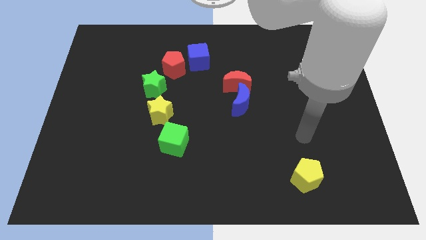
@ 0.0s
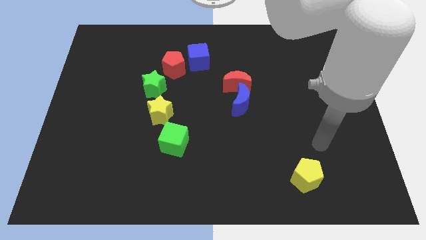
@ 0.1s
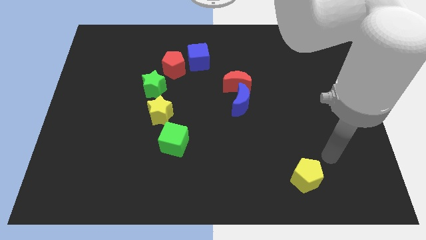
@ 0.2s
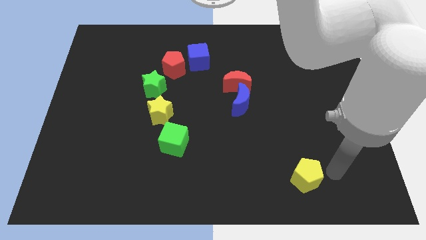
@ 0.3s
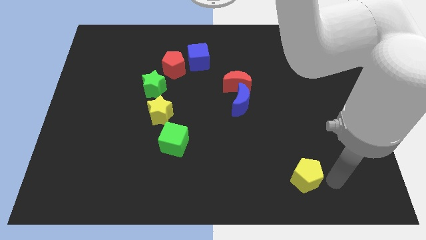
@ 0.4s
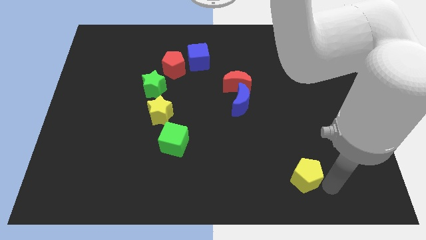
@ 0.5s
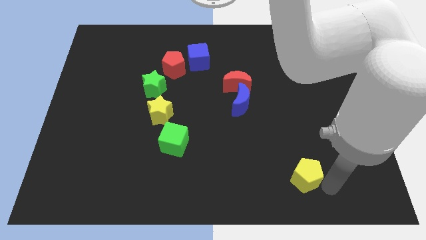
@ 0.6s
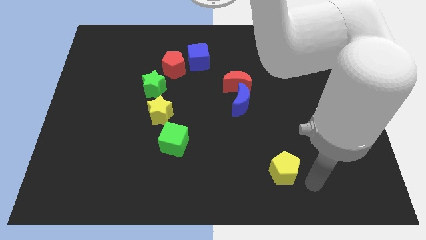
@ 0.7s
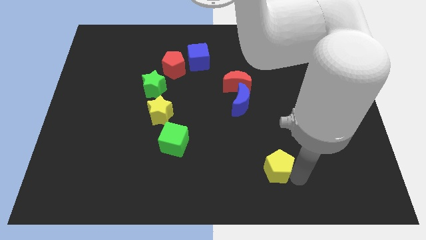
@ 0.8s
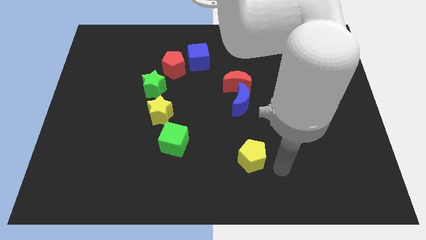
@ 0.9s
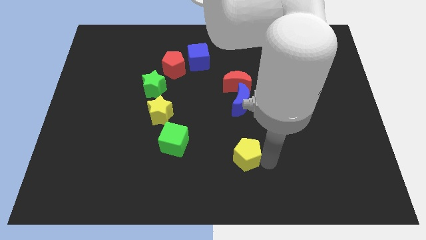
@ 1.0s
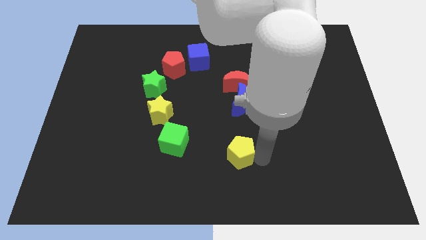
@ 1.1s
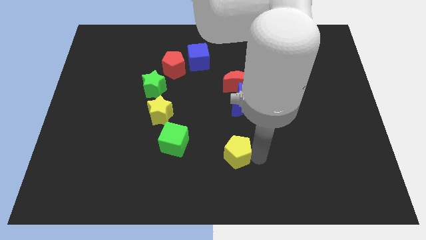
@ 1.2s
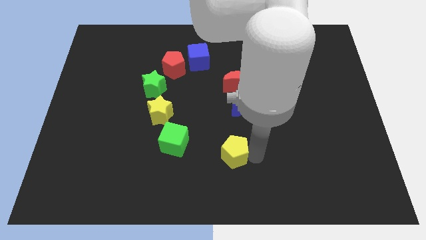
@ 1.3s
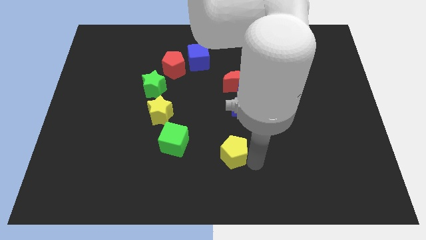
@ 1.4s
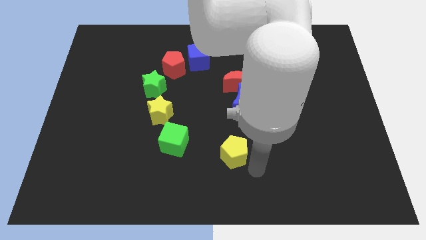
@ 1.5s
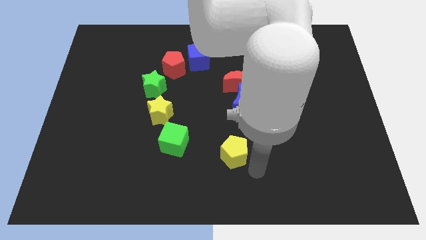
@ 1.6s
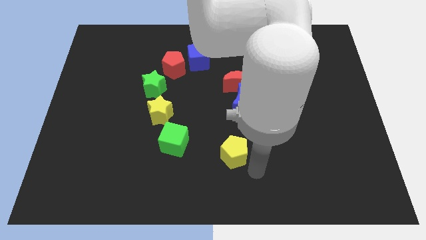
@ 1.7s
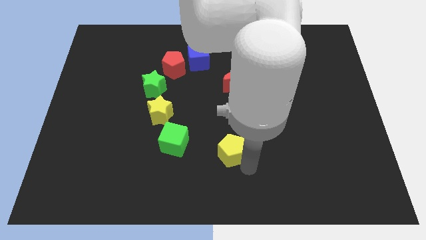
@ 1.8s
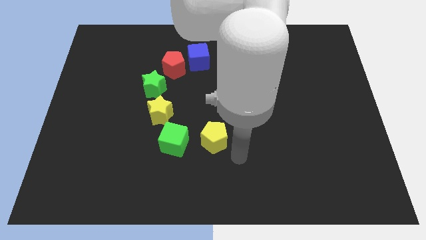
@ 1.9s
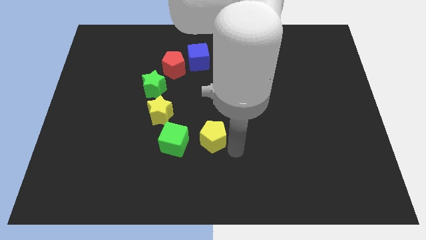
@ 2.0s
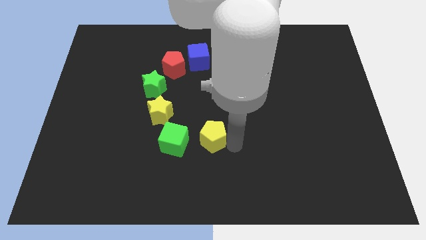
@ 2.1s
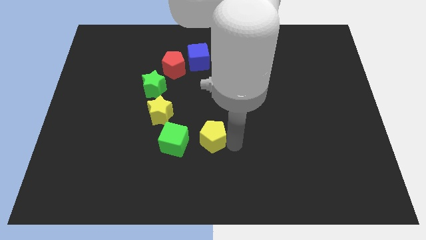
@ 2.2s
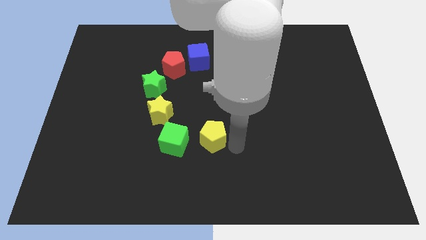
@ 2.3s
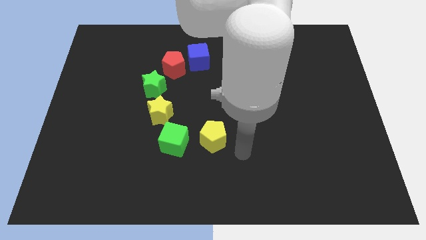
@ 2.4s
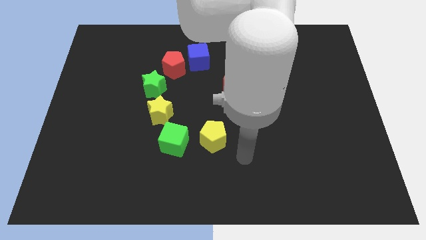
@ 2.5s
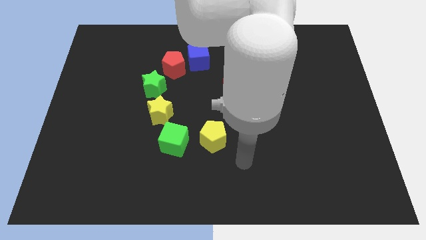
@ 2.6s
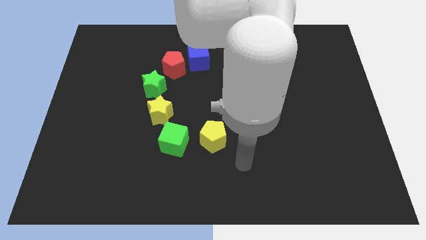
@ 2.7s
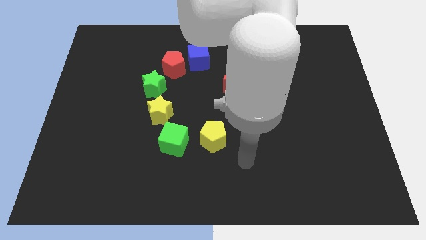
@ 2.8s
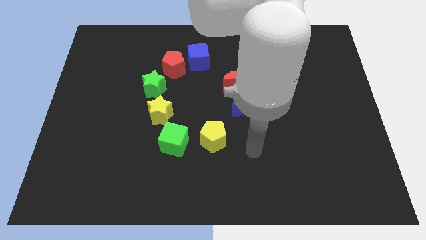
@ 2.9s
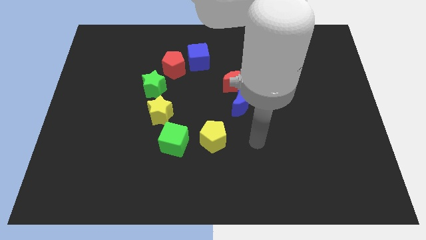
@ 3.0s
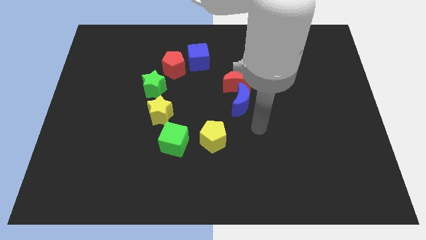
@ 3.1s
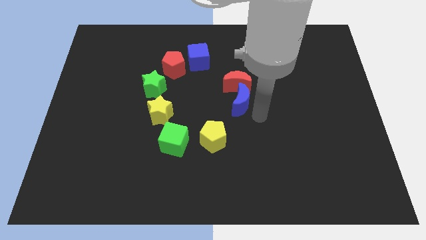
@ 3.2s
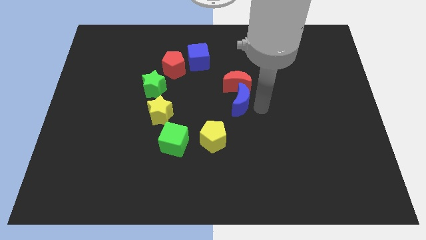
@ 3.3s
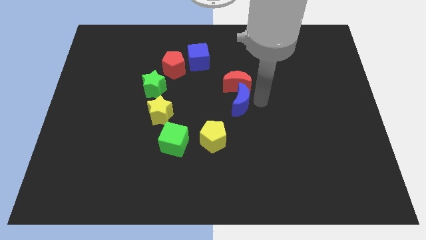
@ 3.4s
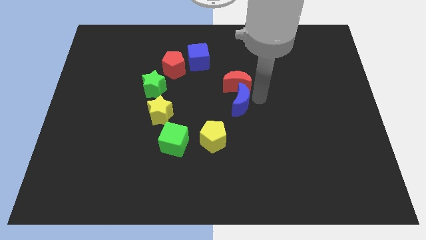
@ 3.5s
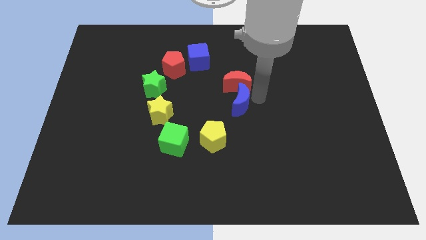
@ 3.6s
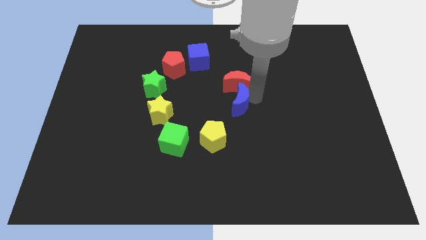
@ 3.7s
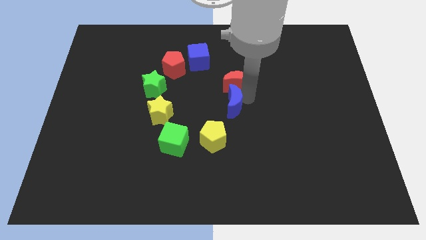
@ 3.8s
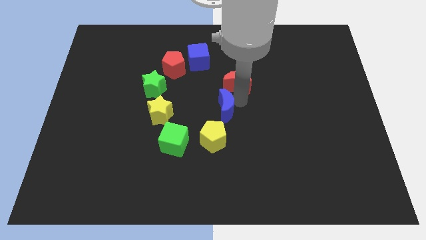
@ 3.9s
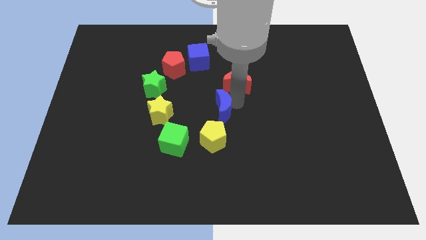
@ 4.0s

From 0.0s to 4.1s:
move the yellow pentagon at the bottom of the blue crescent

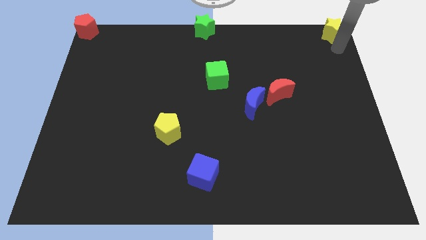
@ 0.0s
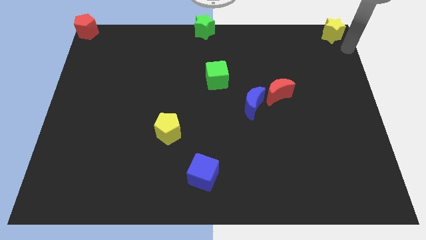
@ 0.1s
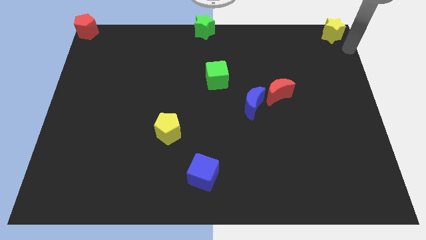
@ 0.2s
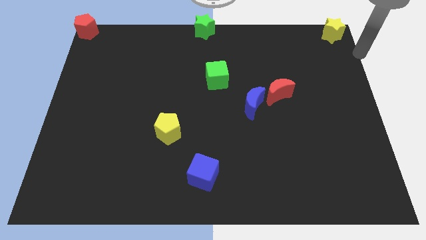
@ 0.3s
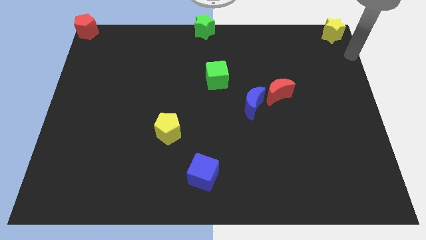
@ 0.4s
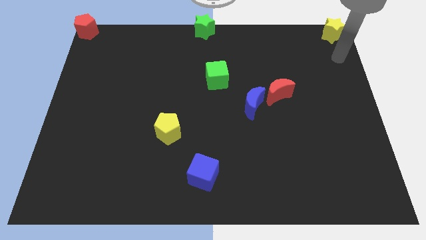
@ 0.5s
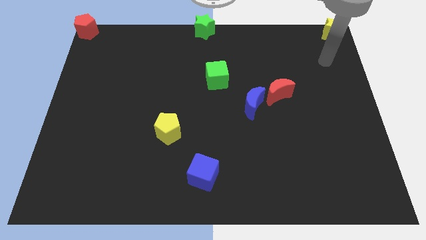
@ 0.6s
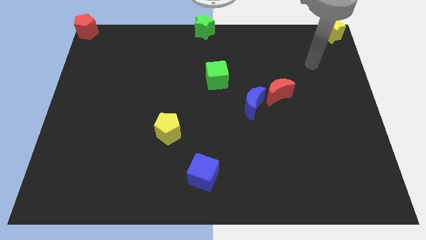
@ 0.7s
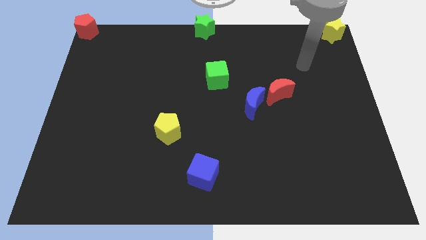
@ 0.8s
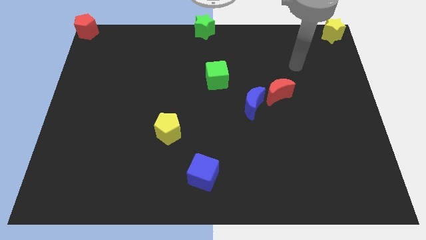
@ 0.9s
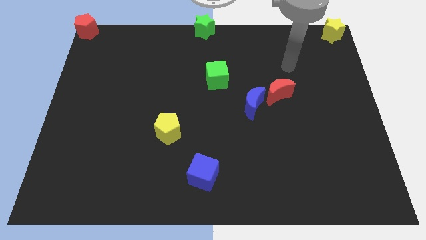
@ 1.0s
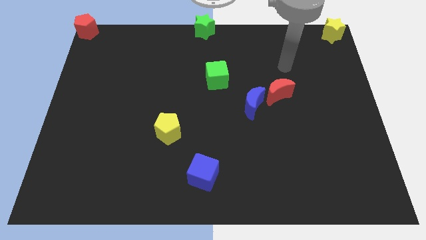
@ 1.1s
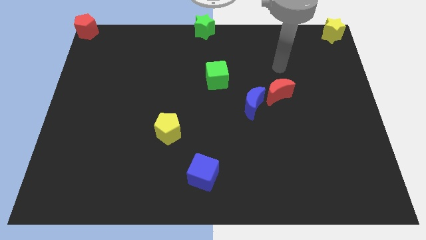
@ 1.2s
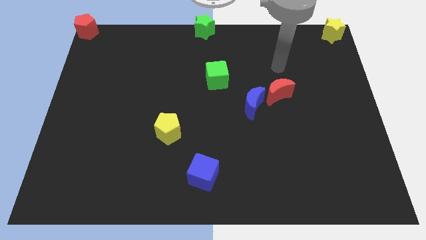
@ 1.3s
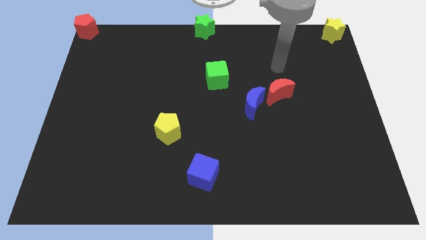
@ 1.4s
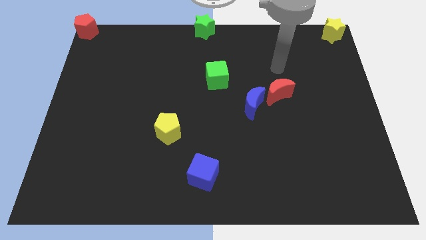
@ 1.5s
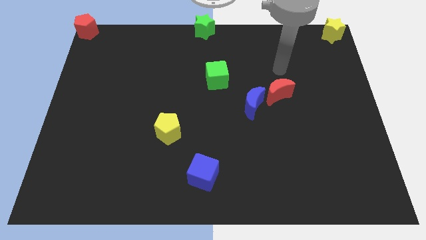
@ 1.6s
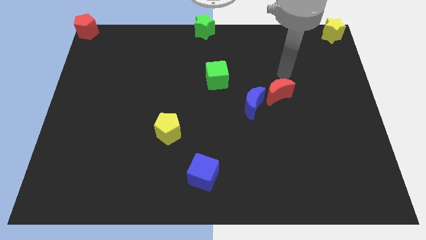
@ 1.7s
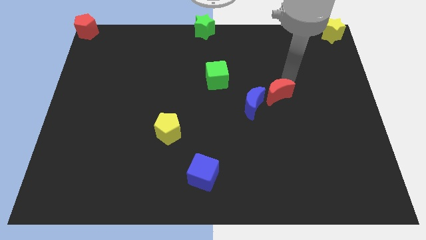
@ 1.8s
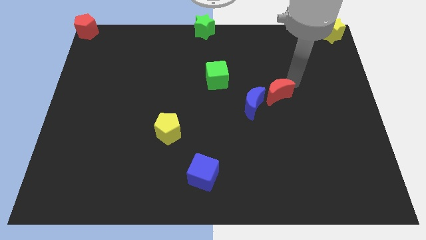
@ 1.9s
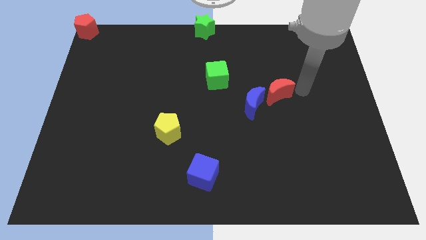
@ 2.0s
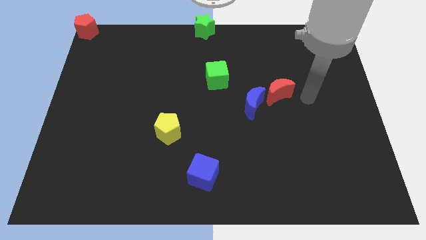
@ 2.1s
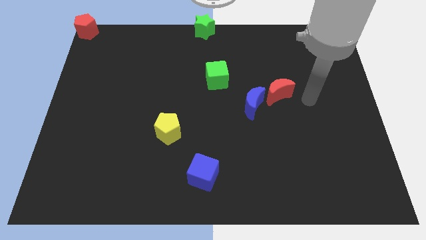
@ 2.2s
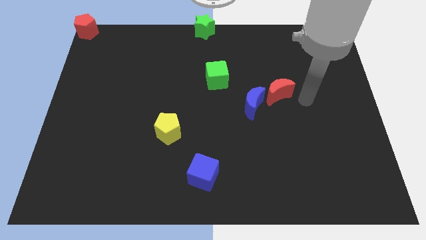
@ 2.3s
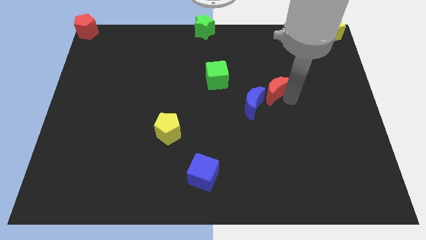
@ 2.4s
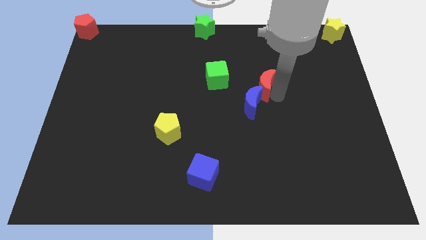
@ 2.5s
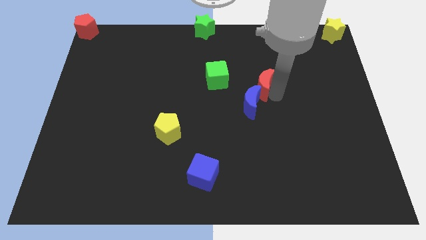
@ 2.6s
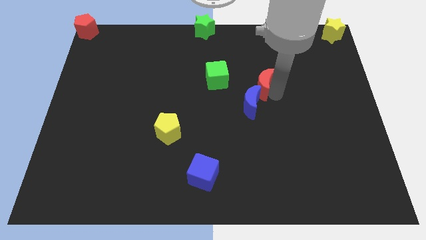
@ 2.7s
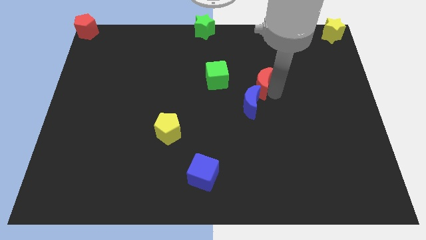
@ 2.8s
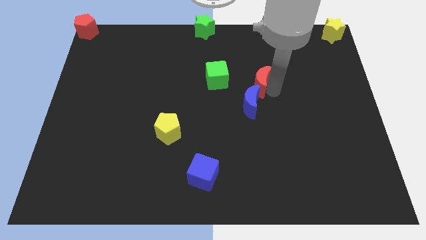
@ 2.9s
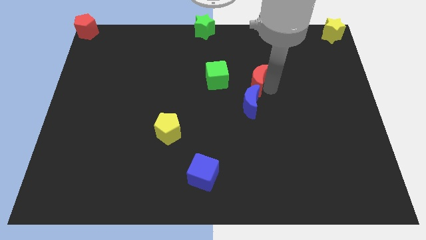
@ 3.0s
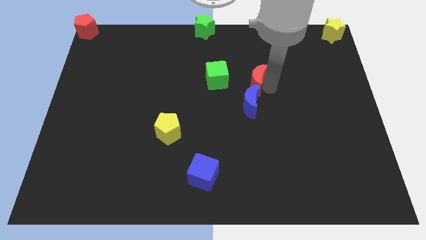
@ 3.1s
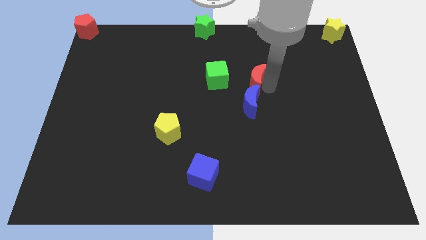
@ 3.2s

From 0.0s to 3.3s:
place red crescent above blue crescent

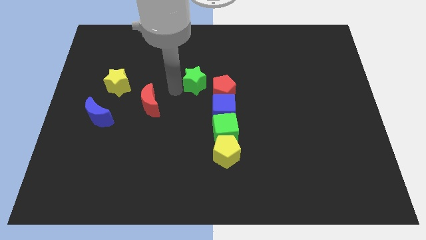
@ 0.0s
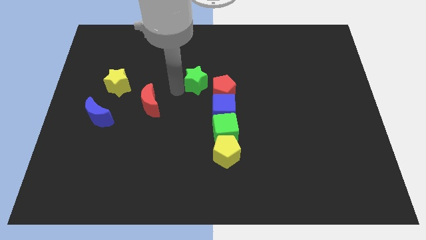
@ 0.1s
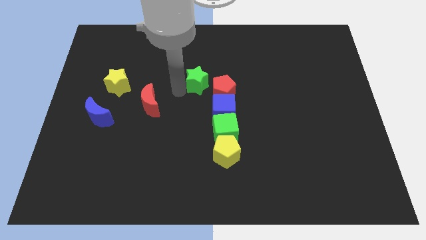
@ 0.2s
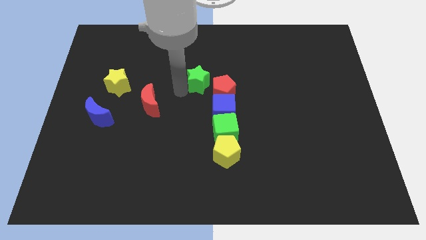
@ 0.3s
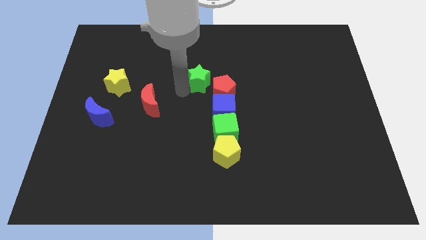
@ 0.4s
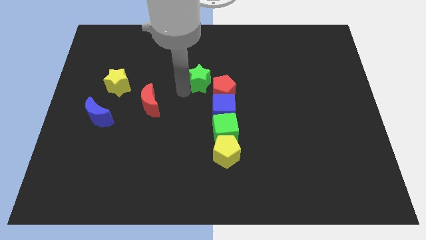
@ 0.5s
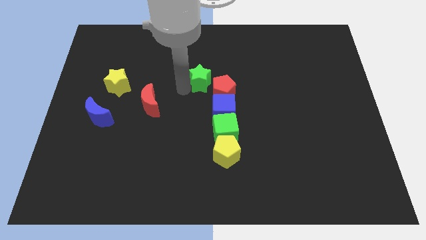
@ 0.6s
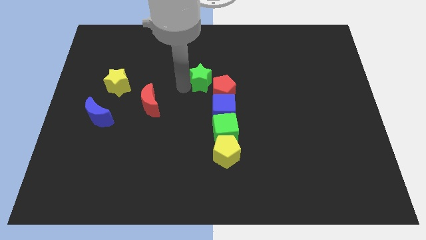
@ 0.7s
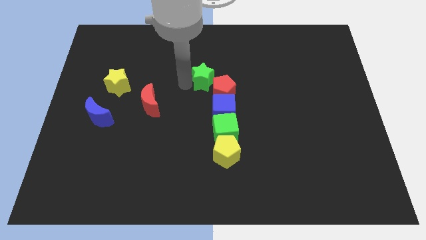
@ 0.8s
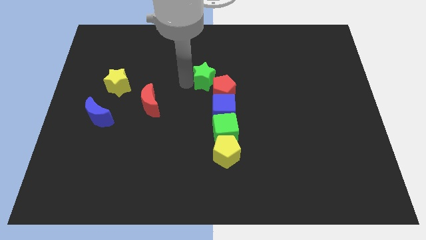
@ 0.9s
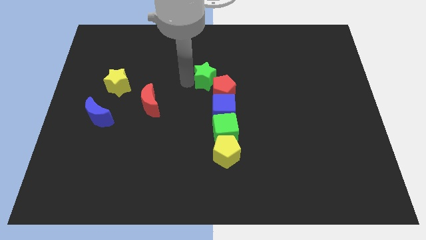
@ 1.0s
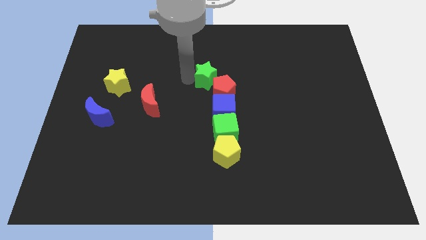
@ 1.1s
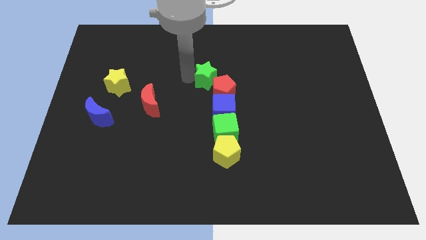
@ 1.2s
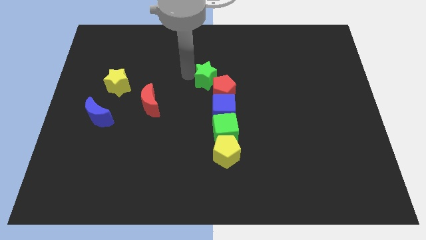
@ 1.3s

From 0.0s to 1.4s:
put the green star at the top left side of the red pentagon

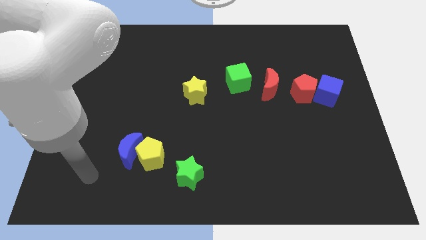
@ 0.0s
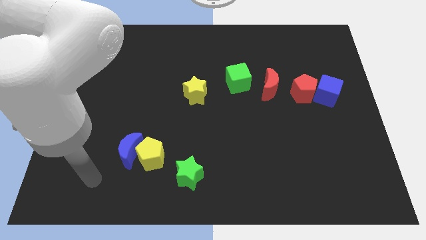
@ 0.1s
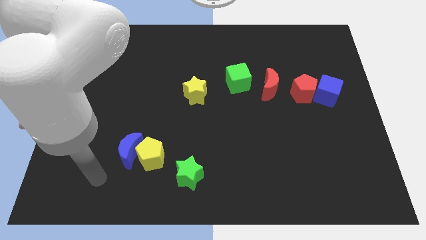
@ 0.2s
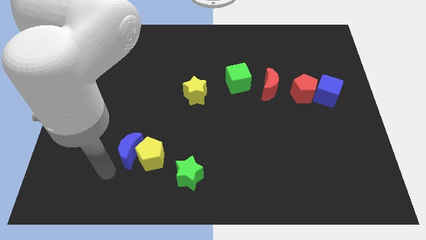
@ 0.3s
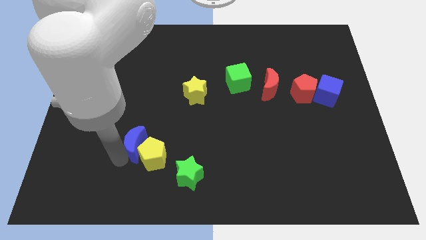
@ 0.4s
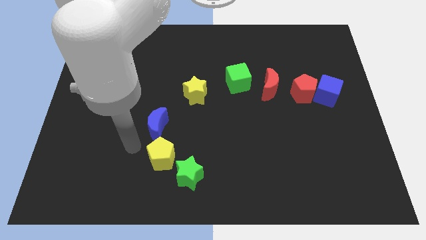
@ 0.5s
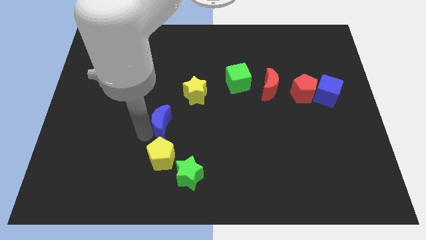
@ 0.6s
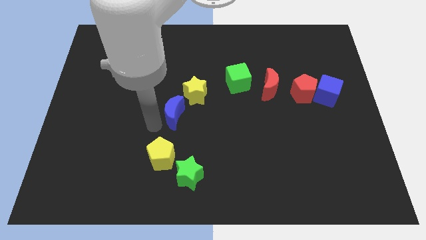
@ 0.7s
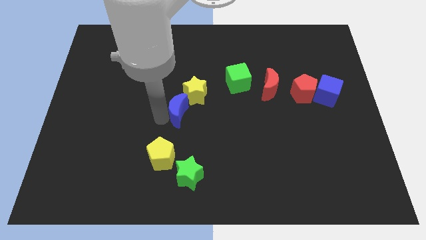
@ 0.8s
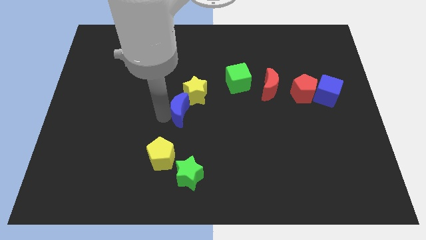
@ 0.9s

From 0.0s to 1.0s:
move the blue crescent at the bottom left of the yellow star
